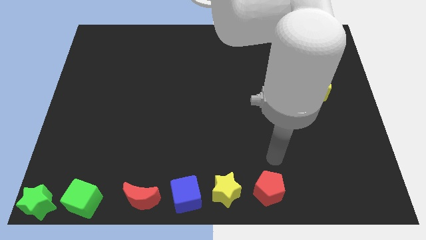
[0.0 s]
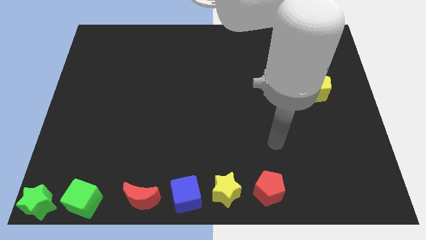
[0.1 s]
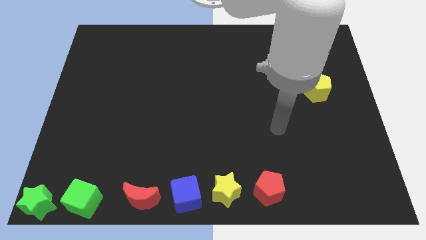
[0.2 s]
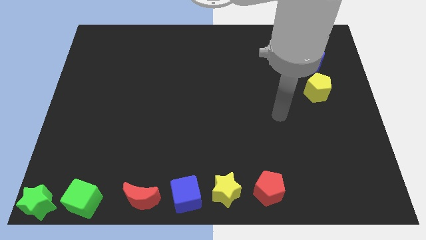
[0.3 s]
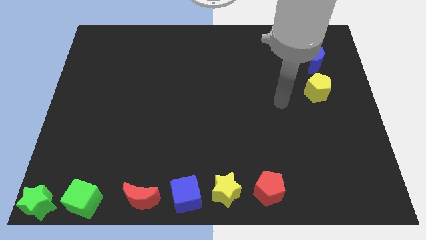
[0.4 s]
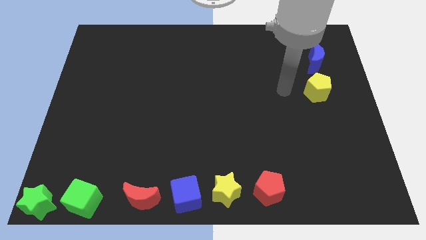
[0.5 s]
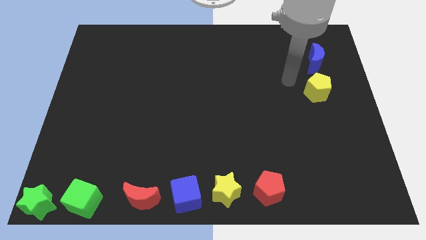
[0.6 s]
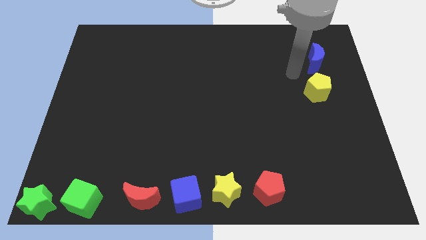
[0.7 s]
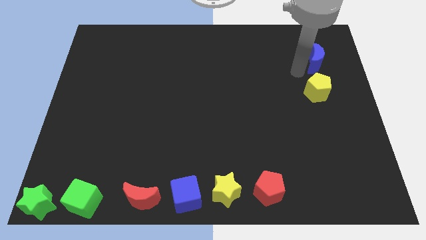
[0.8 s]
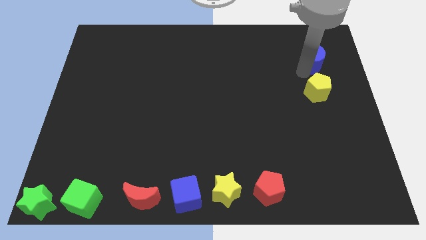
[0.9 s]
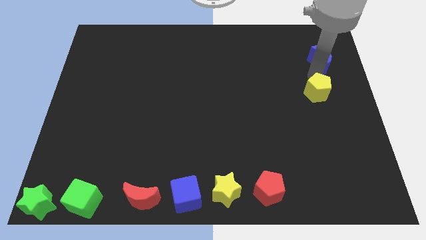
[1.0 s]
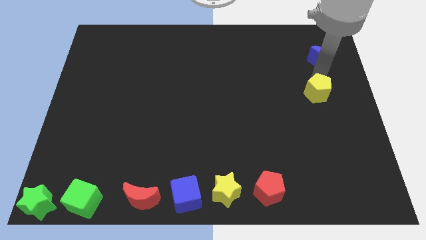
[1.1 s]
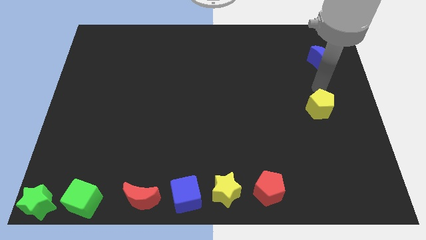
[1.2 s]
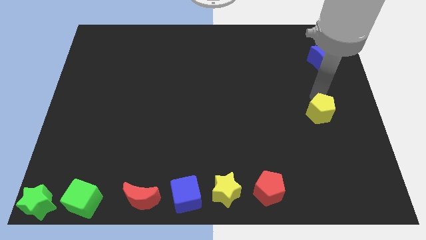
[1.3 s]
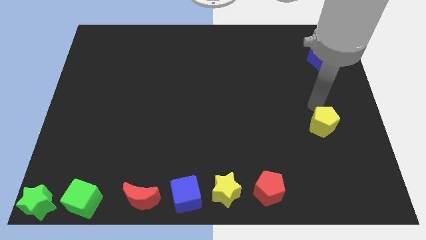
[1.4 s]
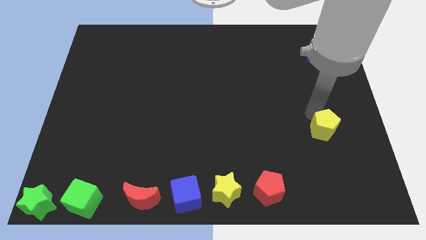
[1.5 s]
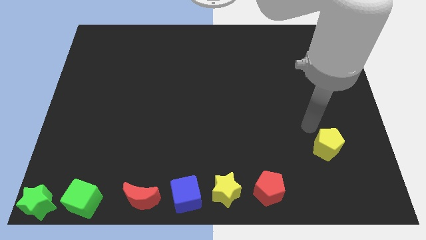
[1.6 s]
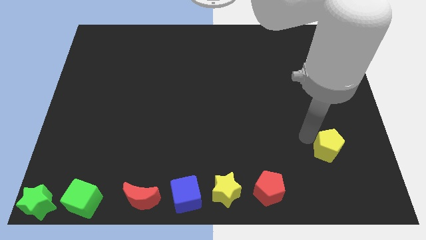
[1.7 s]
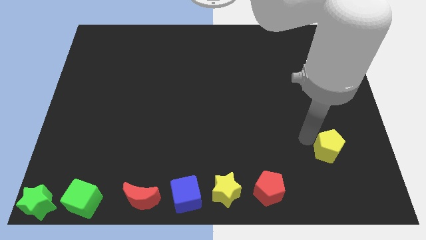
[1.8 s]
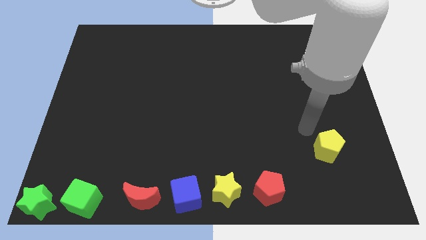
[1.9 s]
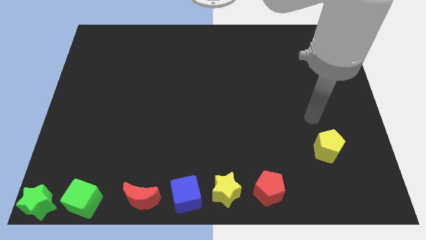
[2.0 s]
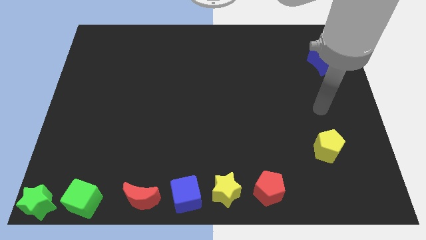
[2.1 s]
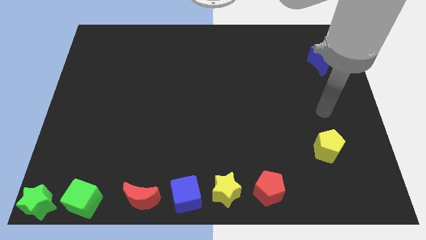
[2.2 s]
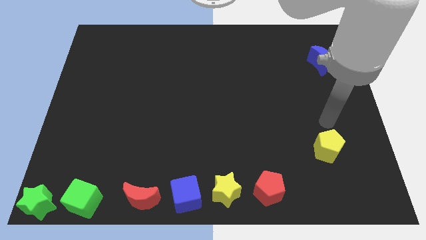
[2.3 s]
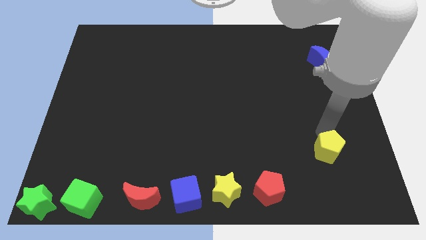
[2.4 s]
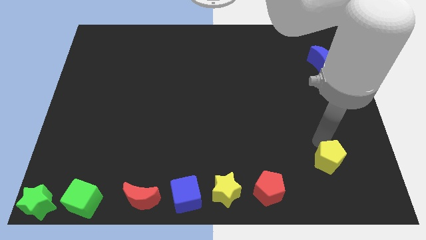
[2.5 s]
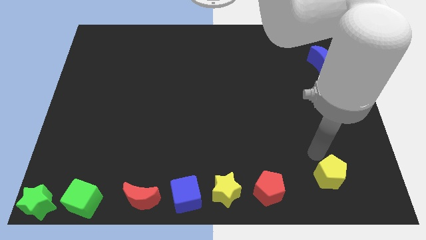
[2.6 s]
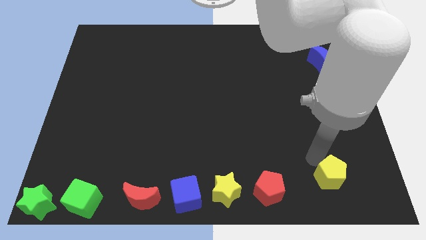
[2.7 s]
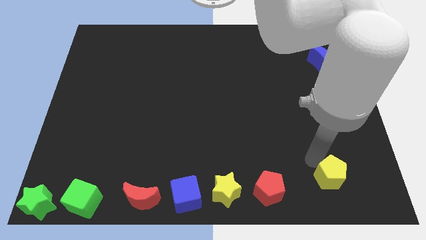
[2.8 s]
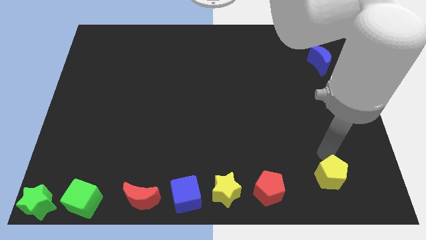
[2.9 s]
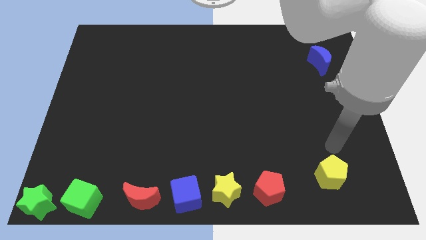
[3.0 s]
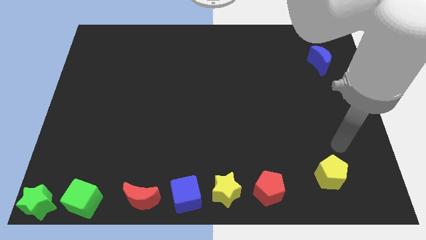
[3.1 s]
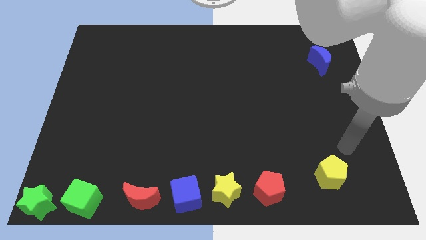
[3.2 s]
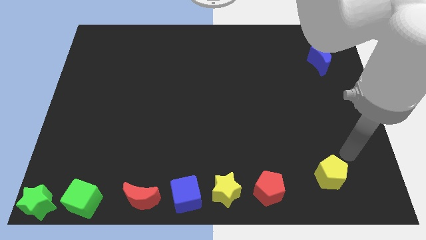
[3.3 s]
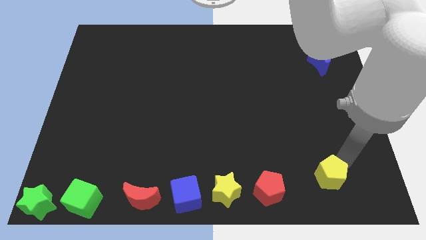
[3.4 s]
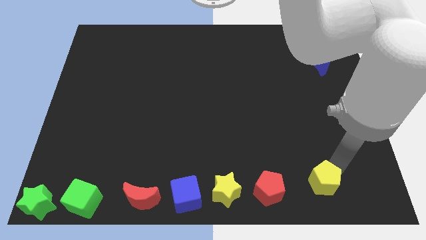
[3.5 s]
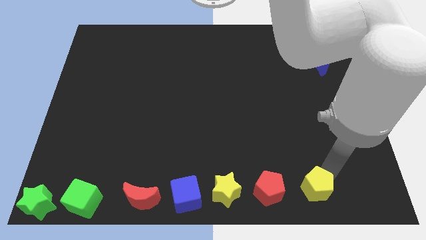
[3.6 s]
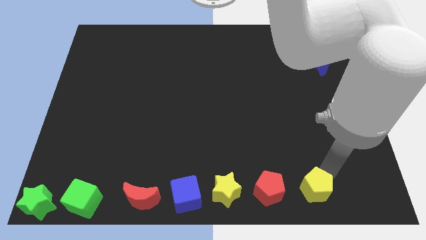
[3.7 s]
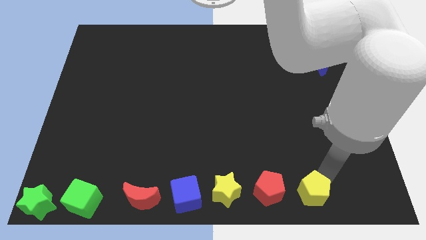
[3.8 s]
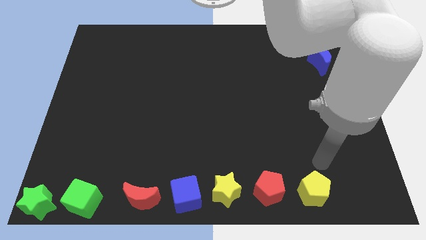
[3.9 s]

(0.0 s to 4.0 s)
move the yellow pentagon to the right side of the red pentagon

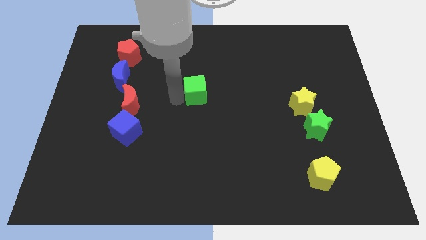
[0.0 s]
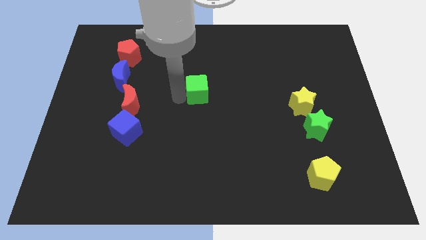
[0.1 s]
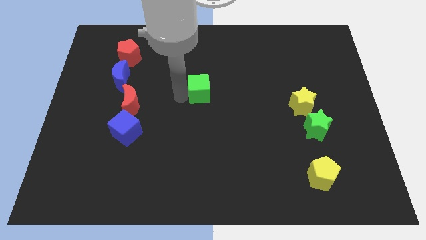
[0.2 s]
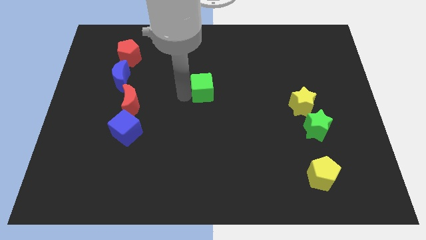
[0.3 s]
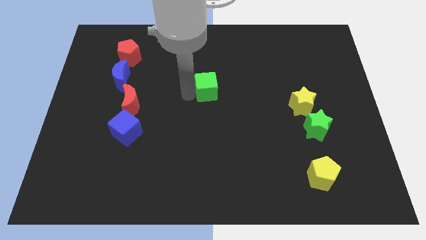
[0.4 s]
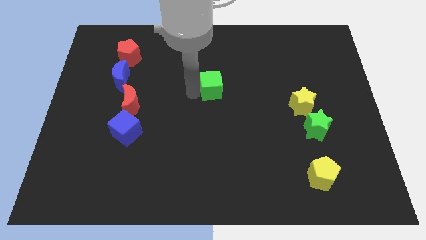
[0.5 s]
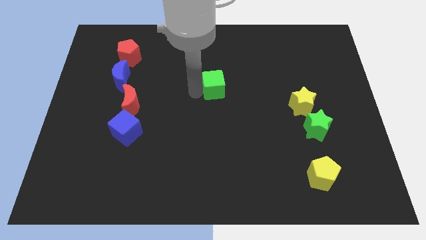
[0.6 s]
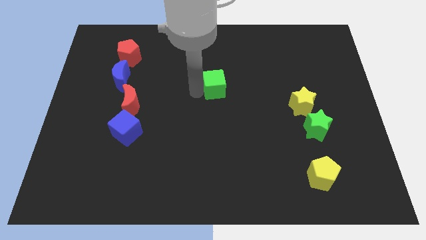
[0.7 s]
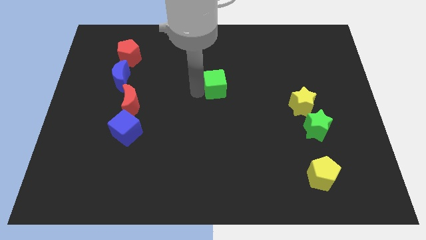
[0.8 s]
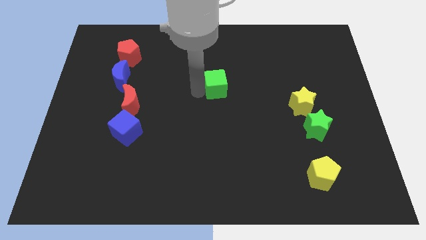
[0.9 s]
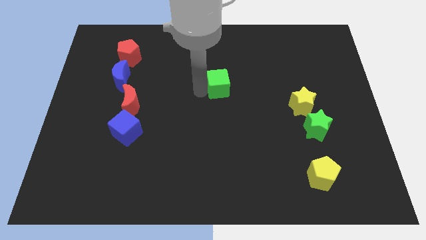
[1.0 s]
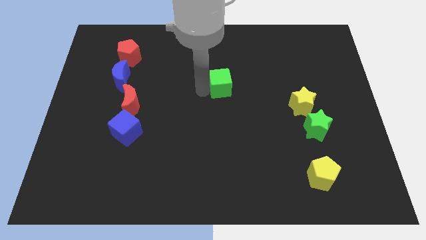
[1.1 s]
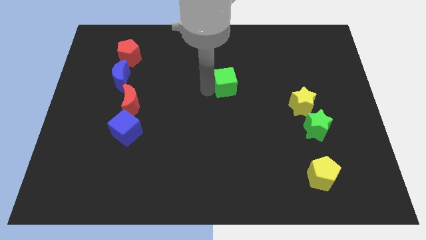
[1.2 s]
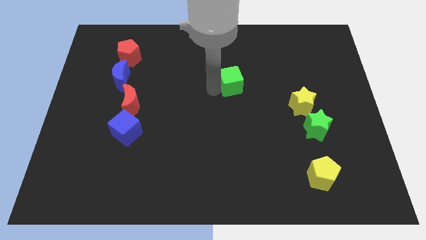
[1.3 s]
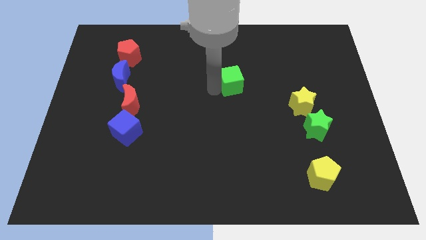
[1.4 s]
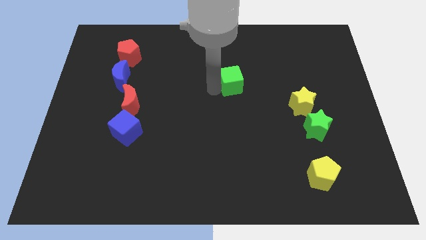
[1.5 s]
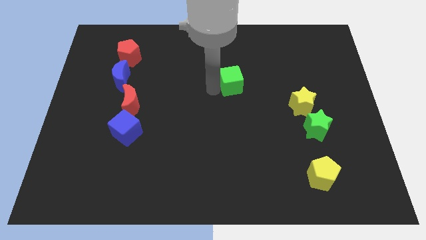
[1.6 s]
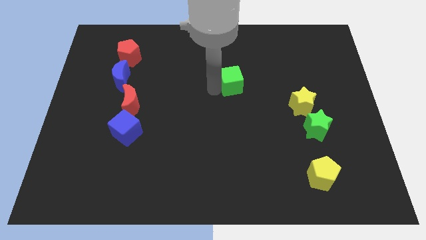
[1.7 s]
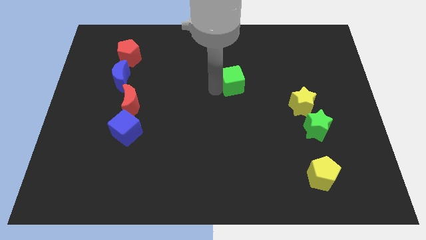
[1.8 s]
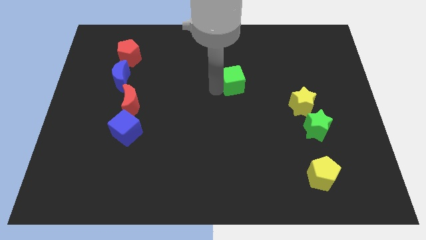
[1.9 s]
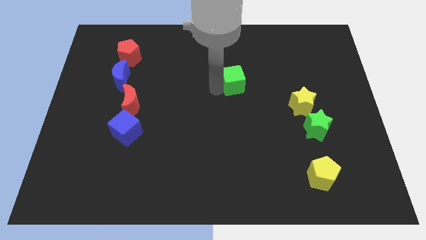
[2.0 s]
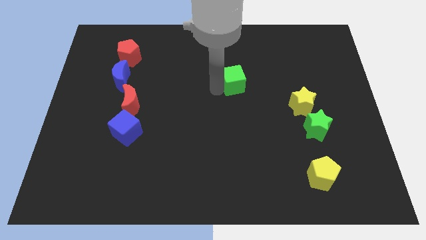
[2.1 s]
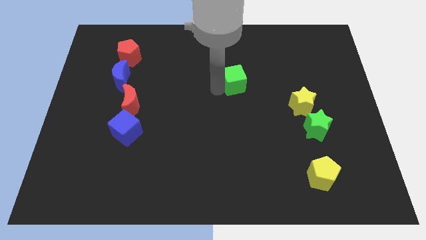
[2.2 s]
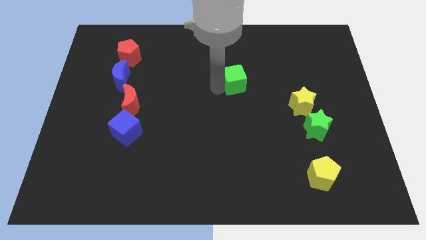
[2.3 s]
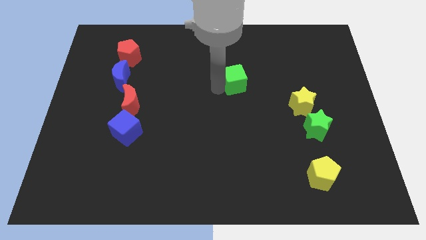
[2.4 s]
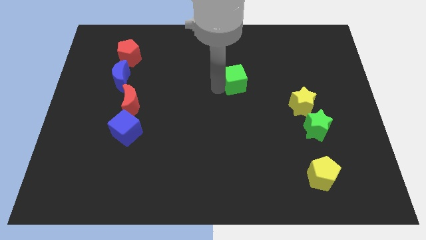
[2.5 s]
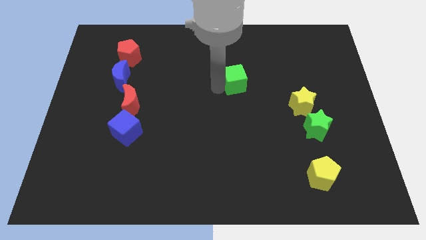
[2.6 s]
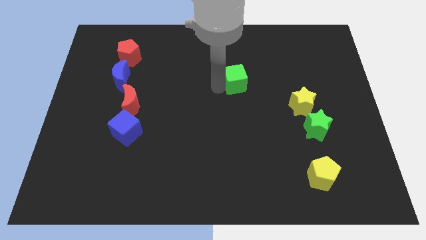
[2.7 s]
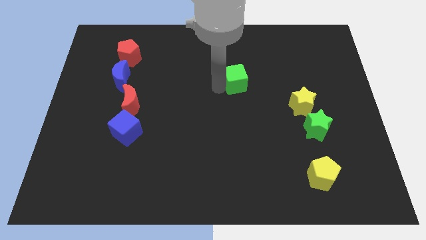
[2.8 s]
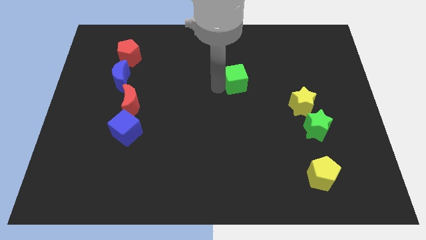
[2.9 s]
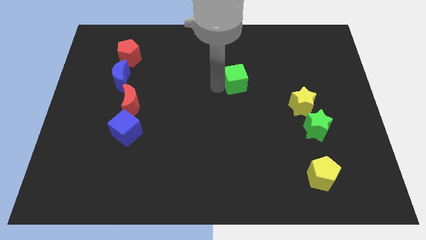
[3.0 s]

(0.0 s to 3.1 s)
put the green cube diagonally to the top left of the yellow star

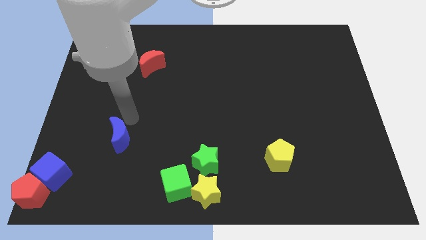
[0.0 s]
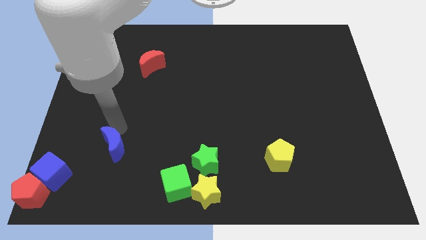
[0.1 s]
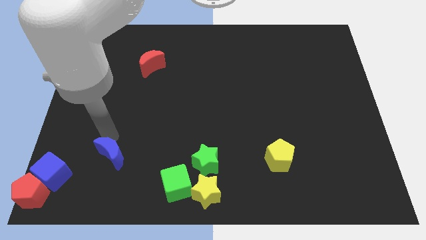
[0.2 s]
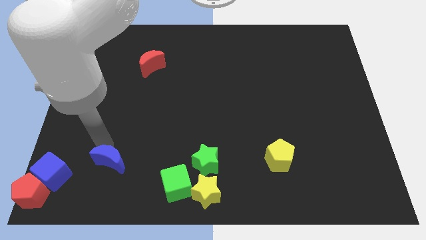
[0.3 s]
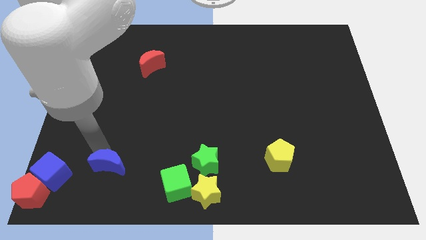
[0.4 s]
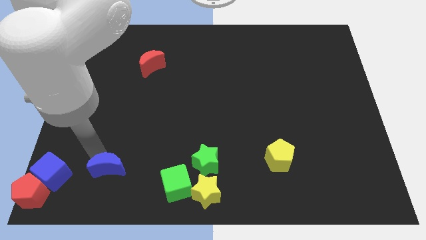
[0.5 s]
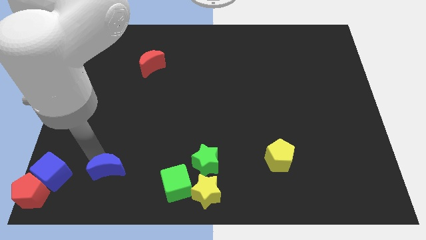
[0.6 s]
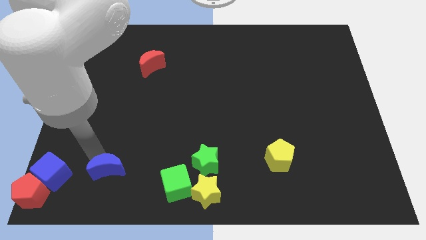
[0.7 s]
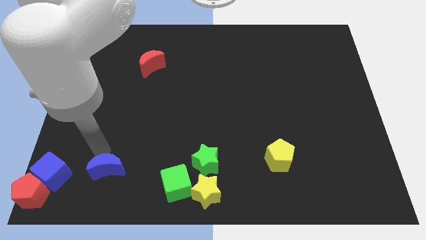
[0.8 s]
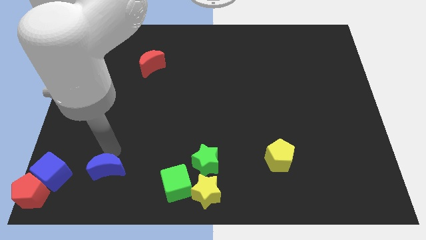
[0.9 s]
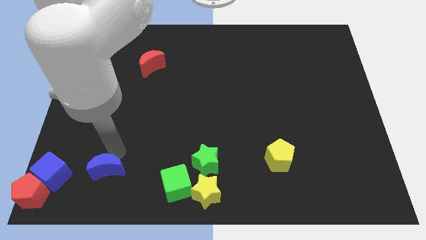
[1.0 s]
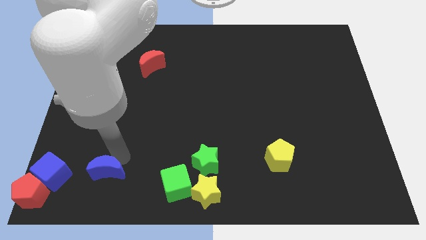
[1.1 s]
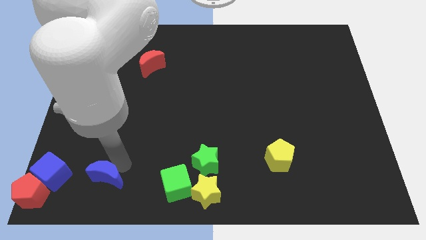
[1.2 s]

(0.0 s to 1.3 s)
move blue moon to bottom

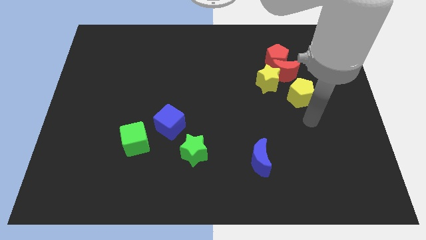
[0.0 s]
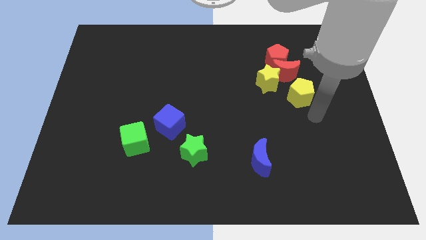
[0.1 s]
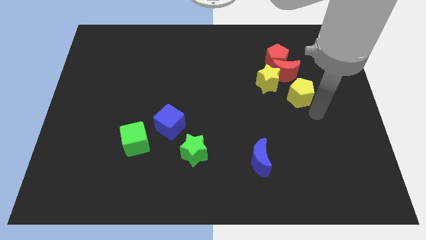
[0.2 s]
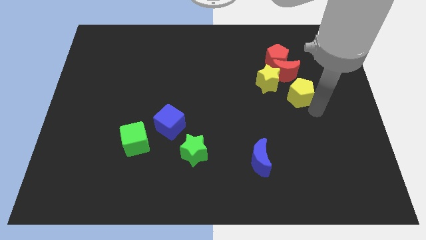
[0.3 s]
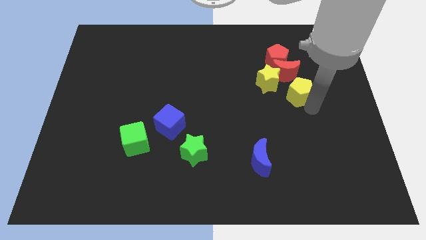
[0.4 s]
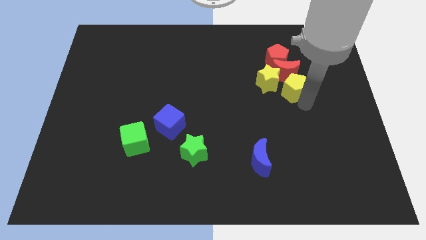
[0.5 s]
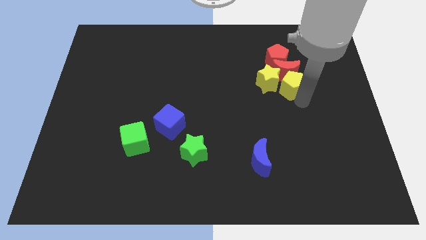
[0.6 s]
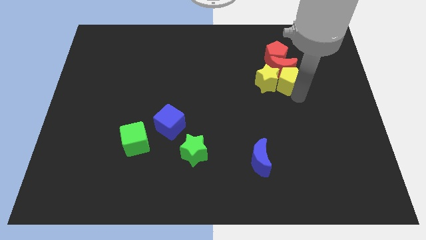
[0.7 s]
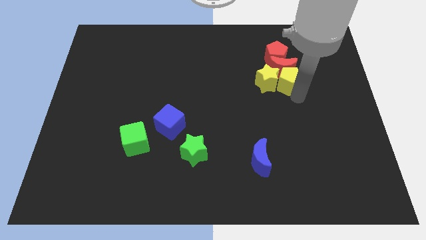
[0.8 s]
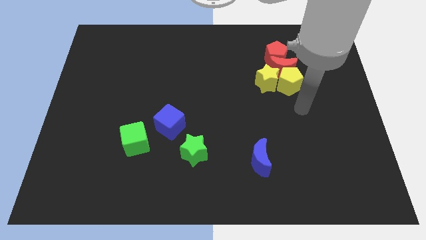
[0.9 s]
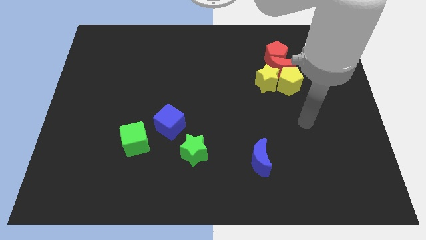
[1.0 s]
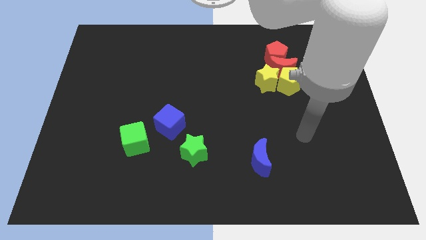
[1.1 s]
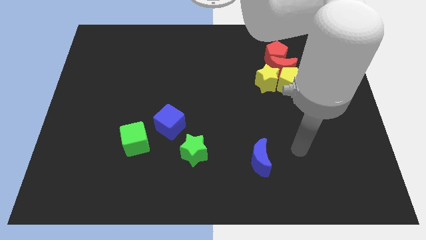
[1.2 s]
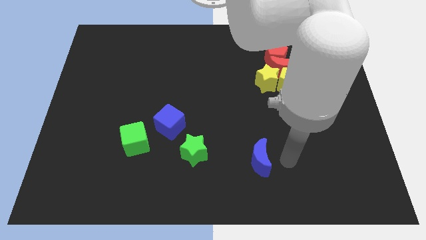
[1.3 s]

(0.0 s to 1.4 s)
put the yellow and red blocks together
